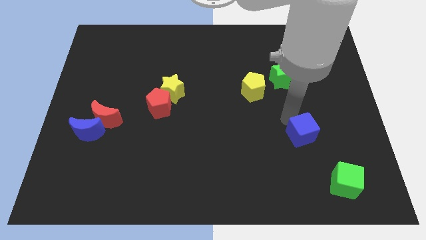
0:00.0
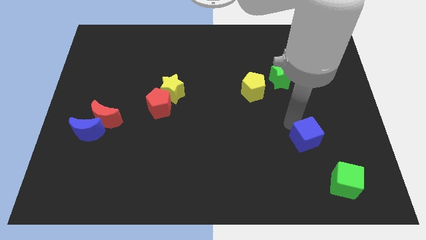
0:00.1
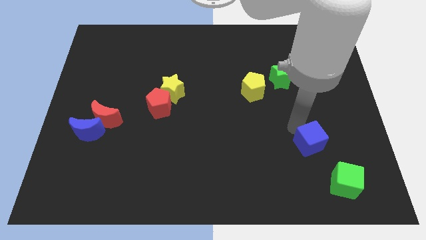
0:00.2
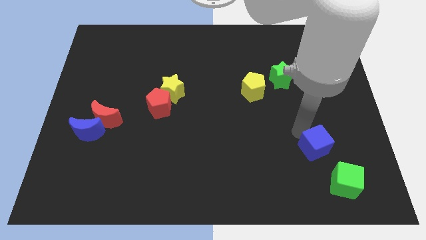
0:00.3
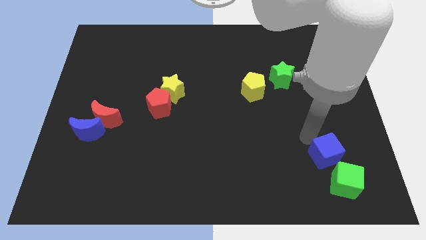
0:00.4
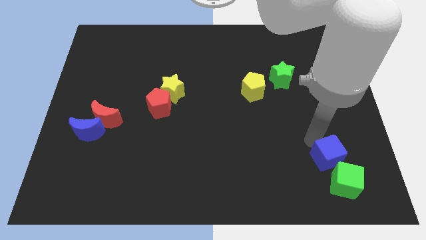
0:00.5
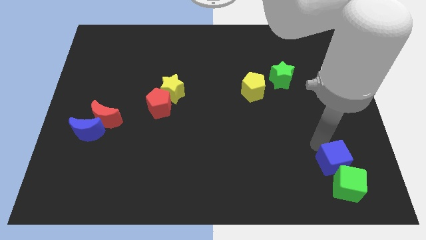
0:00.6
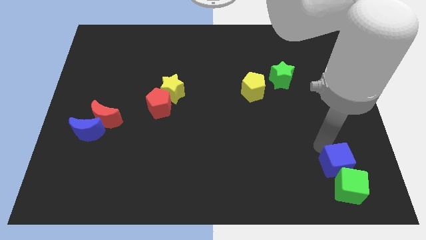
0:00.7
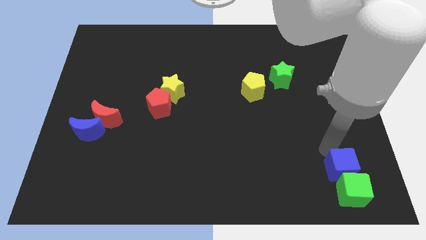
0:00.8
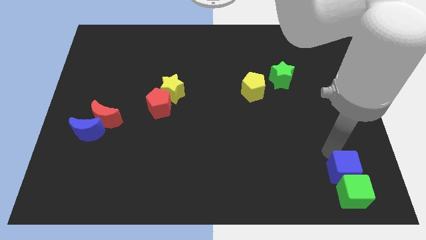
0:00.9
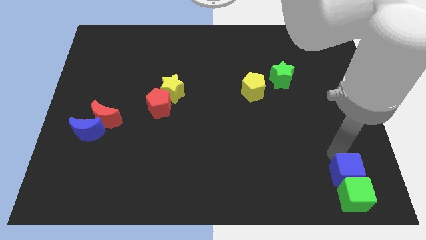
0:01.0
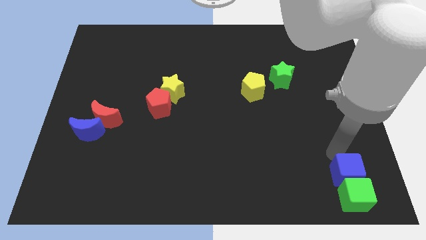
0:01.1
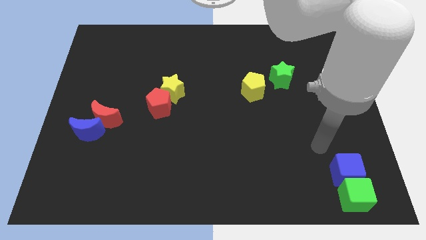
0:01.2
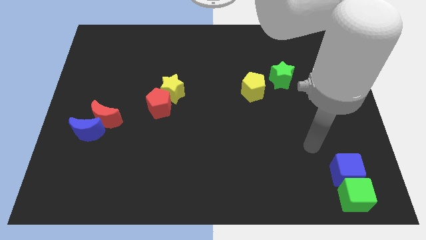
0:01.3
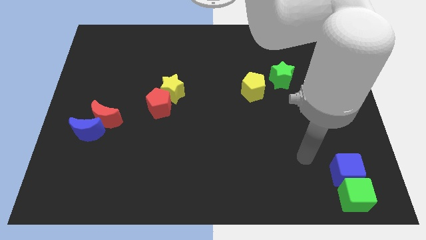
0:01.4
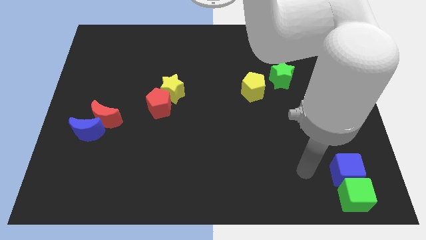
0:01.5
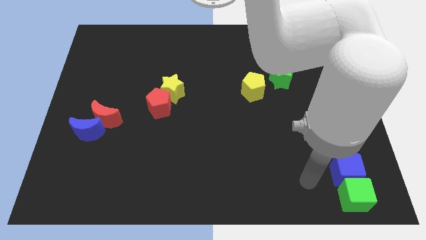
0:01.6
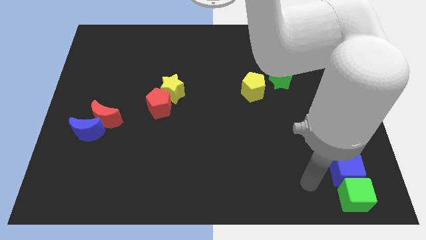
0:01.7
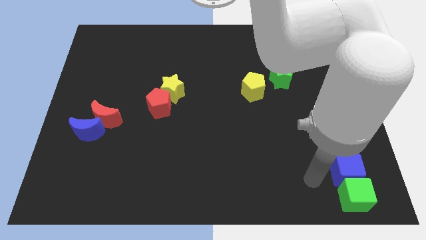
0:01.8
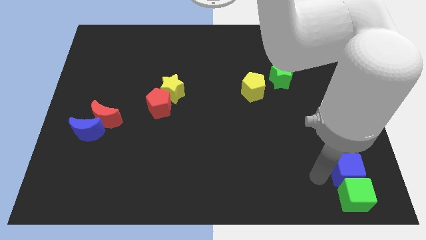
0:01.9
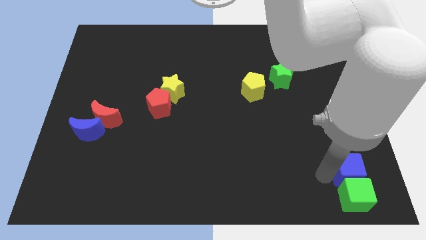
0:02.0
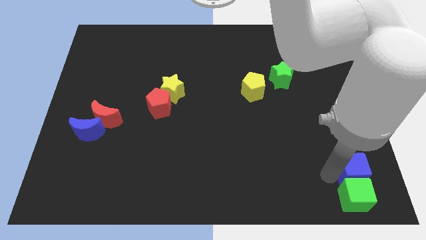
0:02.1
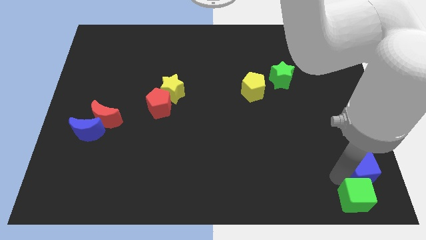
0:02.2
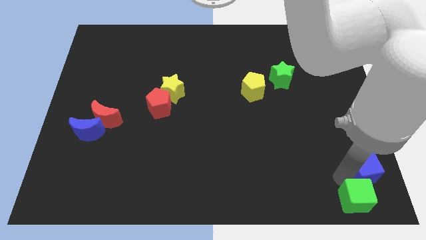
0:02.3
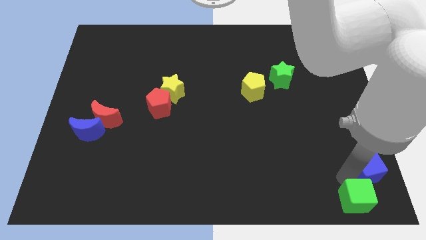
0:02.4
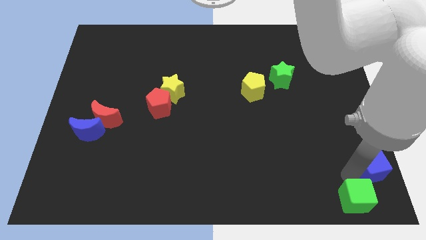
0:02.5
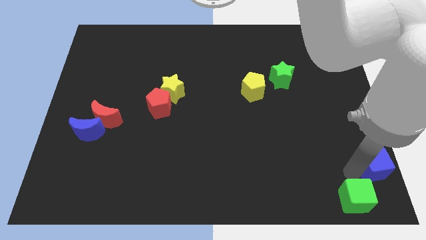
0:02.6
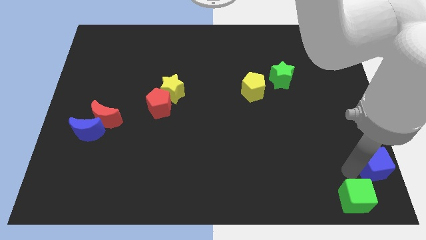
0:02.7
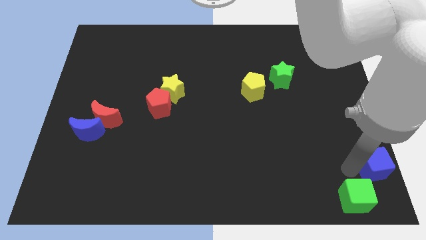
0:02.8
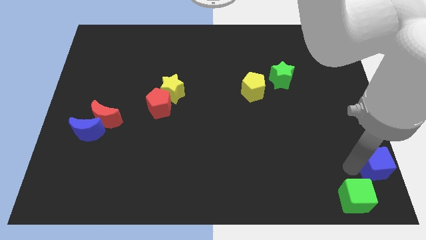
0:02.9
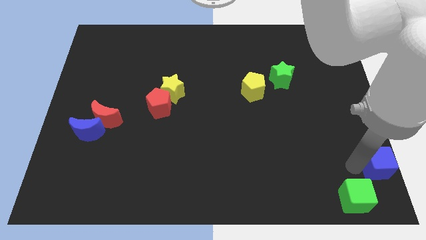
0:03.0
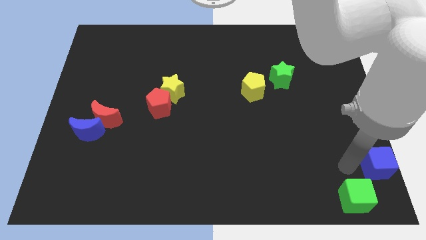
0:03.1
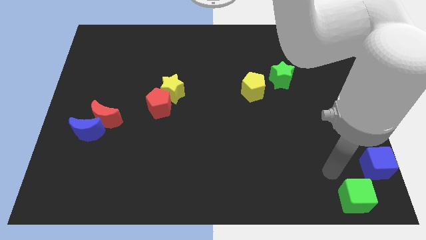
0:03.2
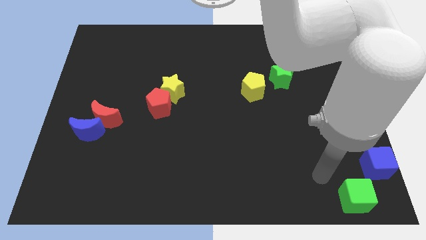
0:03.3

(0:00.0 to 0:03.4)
arrange blue and green cubes diagonally to each other

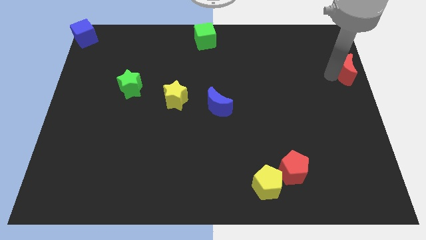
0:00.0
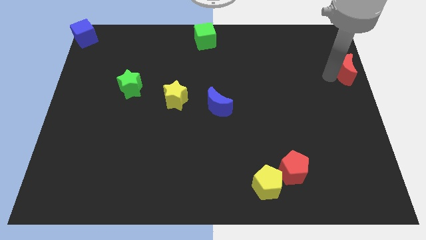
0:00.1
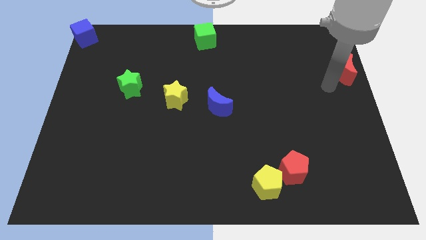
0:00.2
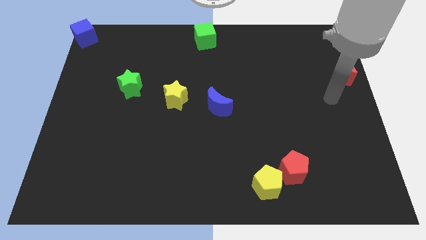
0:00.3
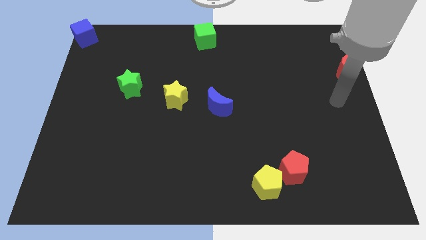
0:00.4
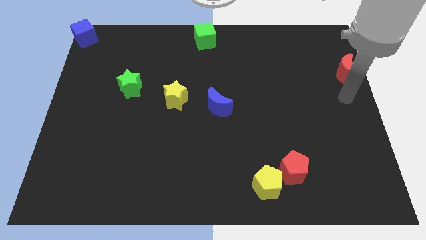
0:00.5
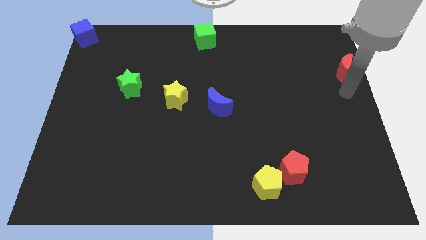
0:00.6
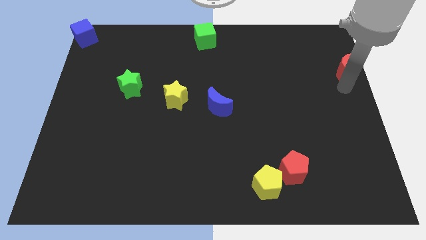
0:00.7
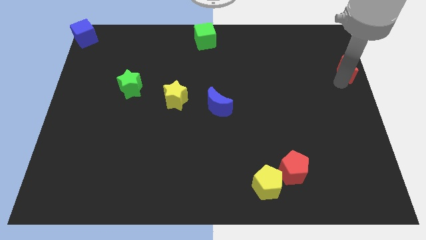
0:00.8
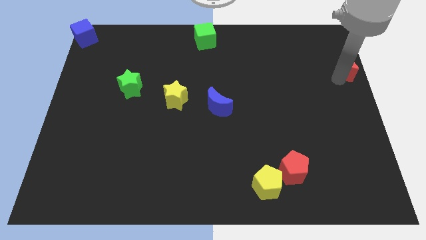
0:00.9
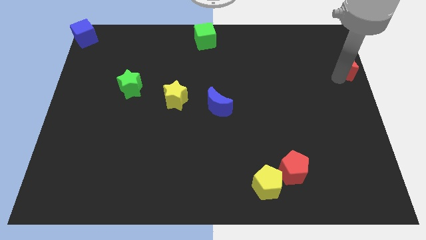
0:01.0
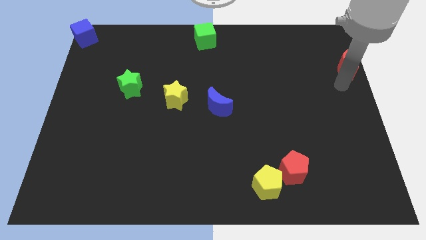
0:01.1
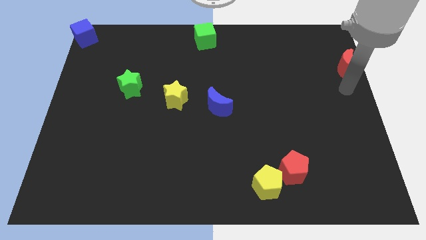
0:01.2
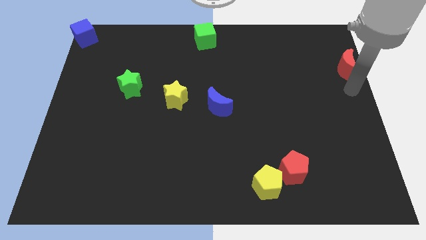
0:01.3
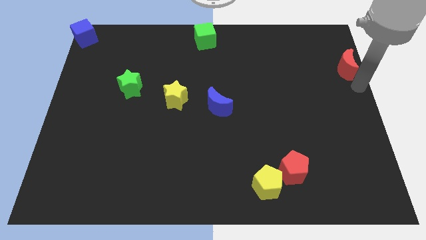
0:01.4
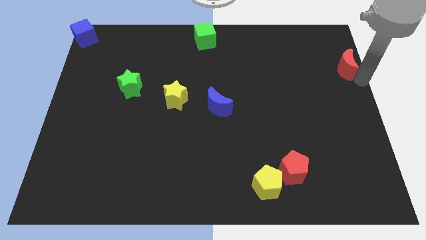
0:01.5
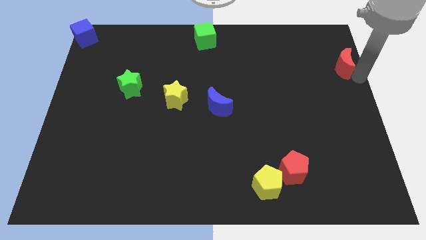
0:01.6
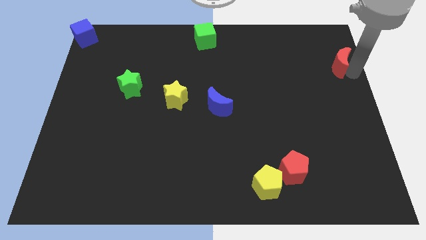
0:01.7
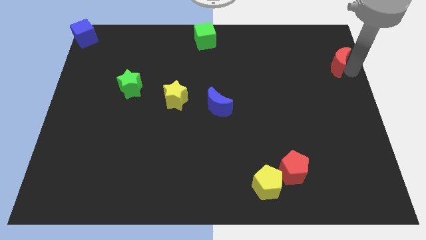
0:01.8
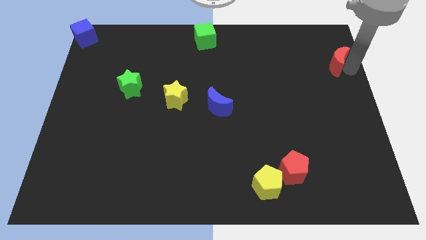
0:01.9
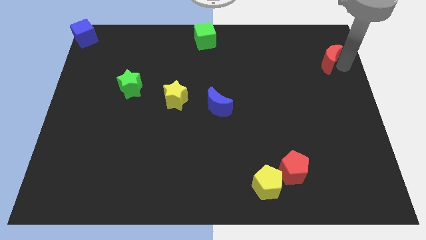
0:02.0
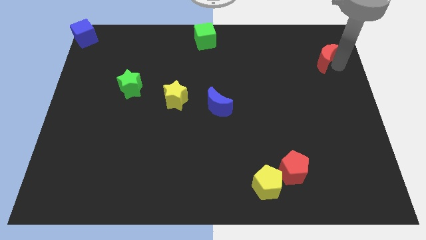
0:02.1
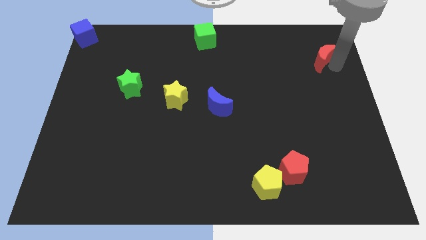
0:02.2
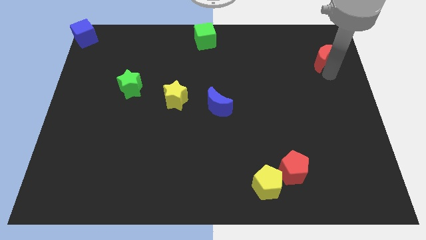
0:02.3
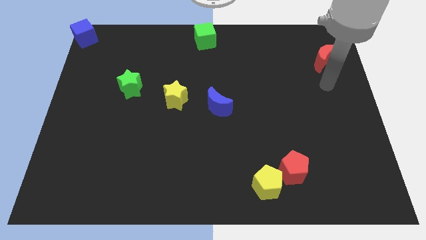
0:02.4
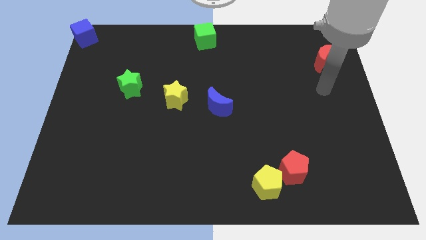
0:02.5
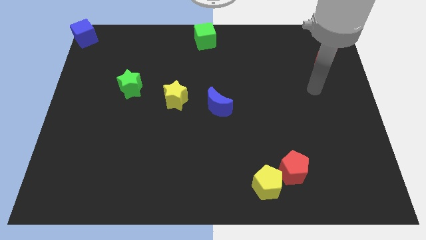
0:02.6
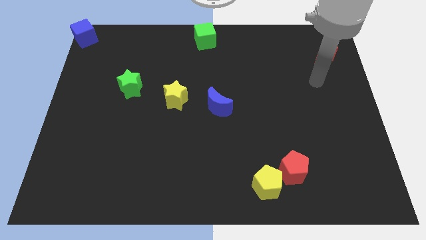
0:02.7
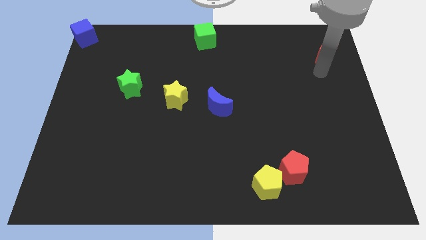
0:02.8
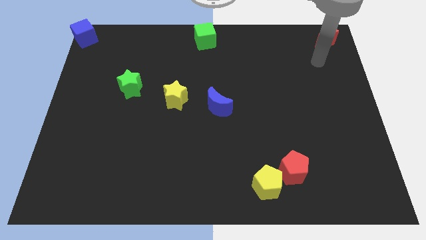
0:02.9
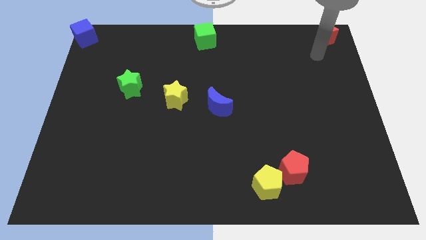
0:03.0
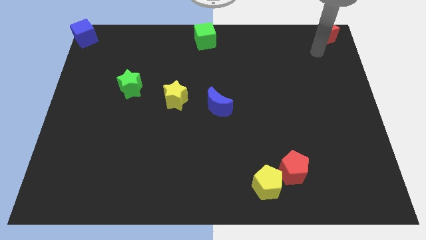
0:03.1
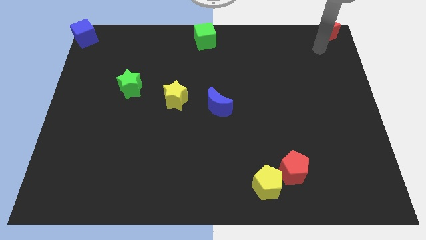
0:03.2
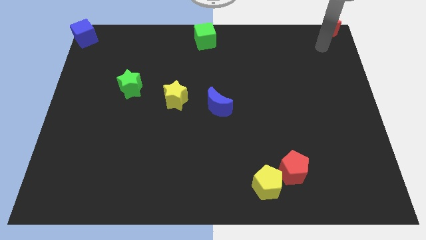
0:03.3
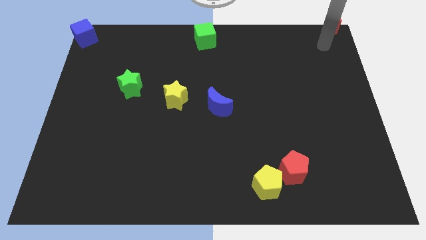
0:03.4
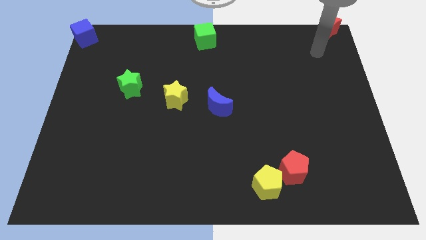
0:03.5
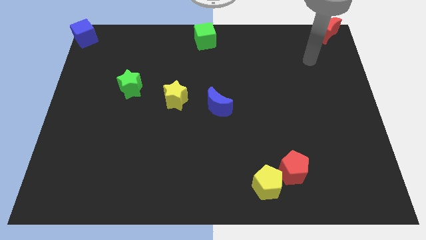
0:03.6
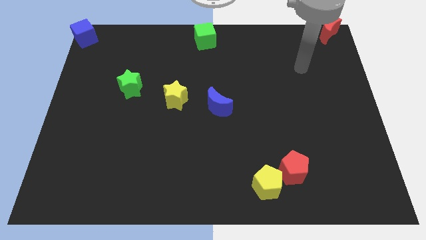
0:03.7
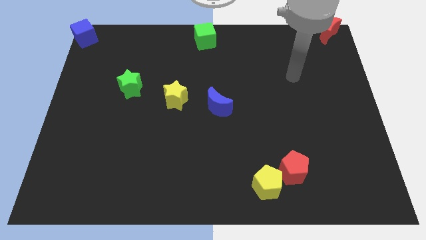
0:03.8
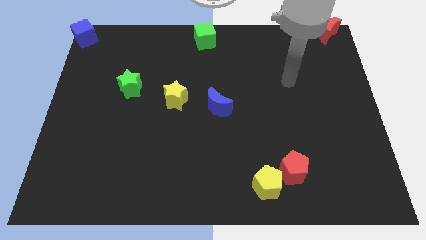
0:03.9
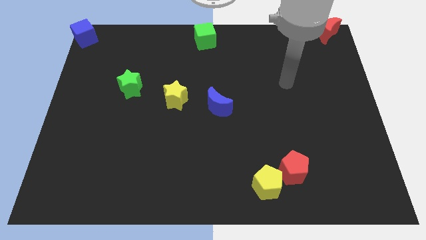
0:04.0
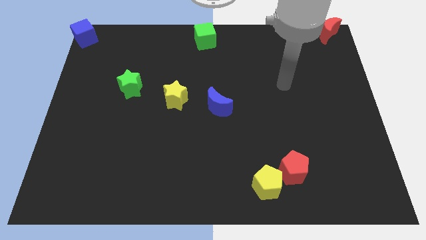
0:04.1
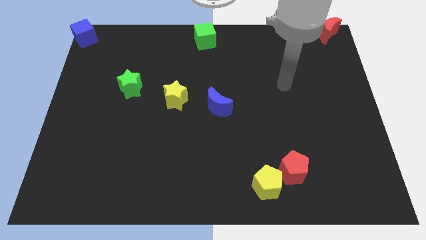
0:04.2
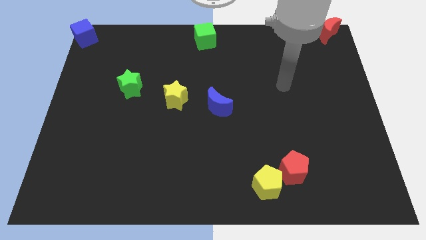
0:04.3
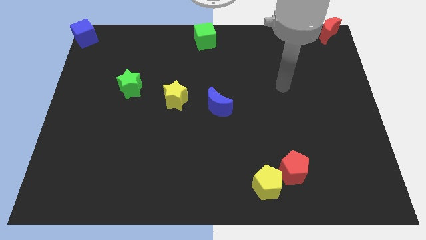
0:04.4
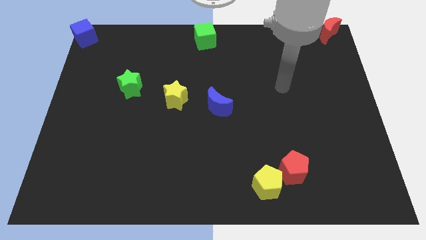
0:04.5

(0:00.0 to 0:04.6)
push the red moon to the top right

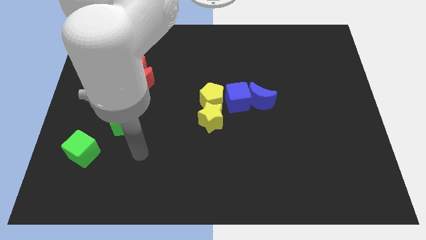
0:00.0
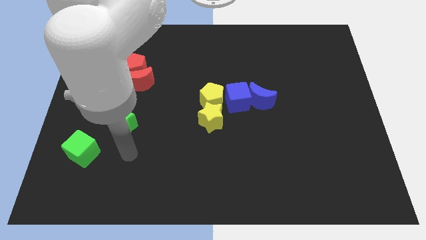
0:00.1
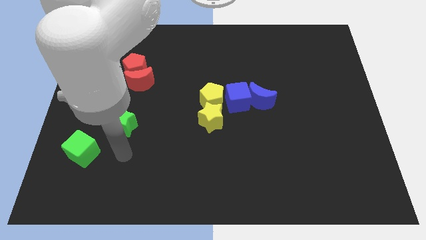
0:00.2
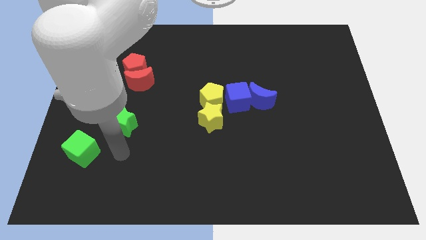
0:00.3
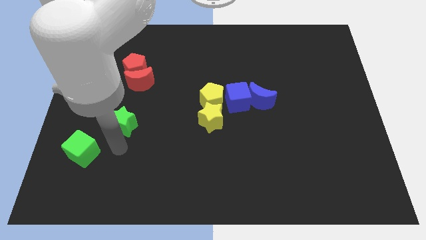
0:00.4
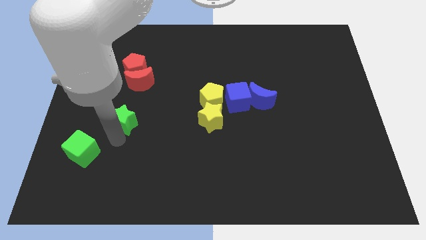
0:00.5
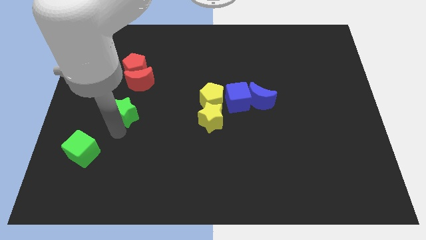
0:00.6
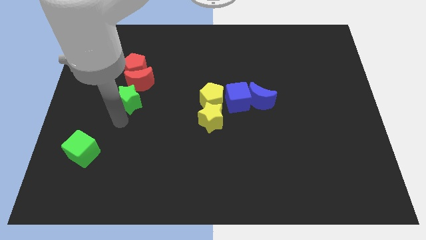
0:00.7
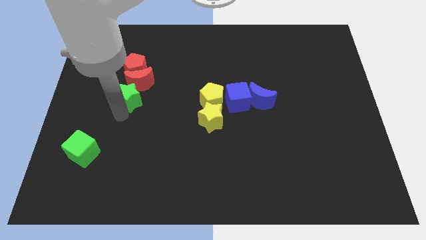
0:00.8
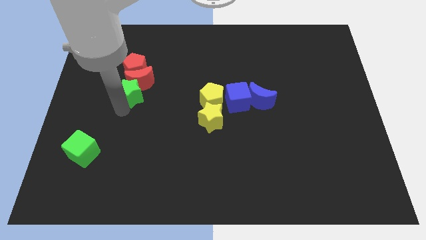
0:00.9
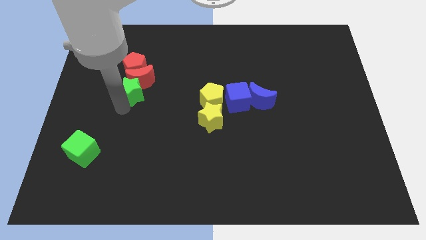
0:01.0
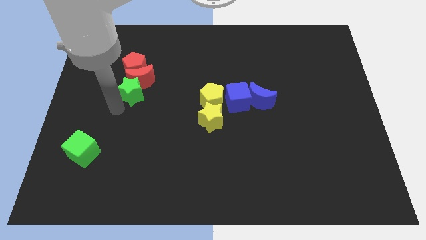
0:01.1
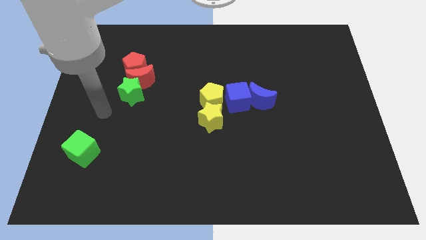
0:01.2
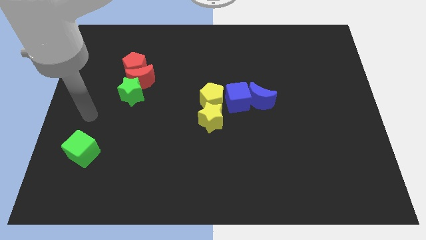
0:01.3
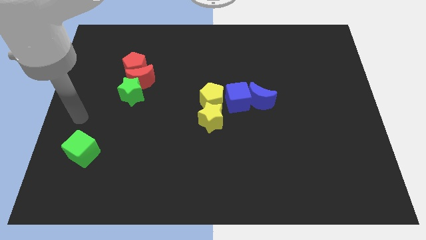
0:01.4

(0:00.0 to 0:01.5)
move the green star into the red moon
